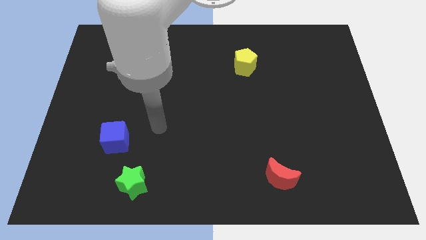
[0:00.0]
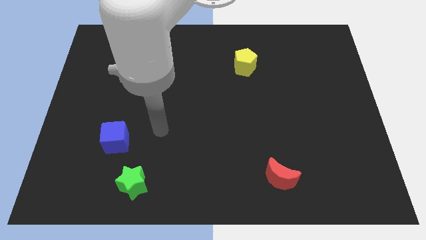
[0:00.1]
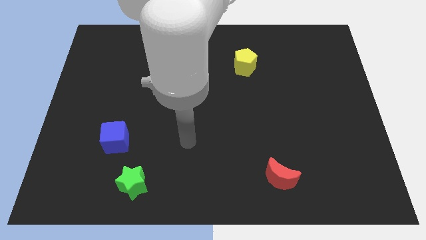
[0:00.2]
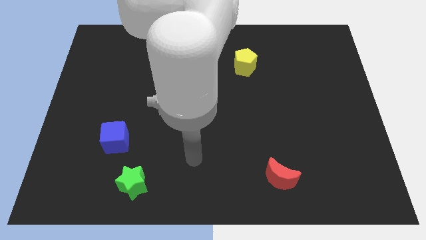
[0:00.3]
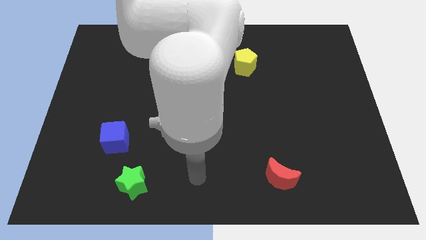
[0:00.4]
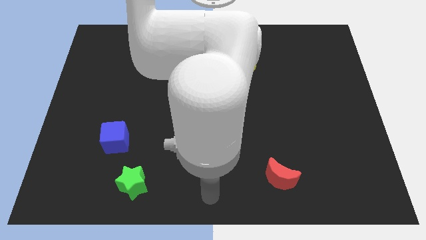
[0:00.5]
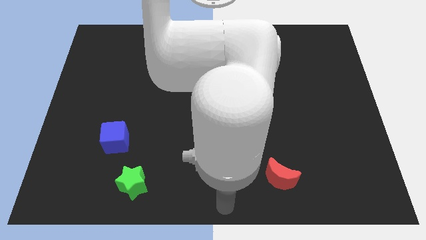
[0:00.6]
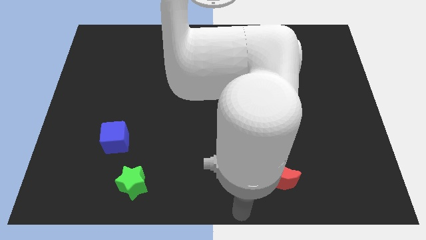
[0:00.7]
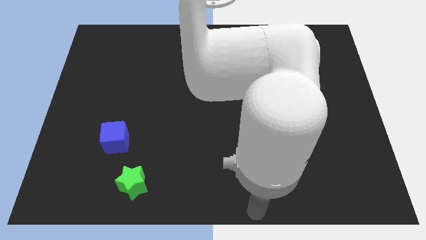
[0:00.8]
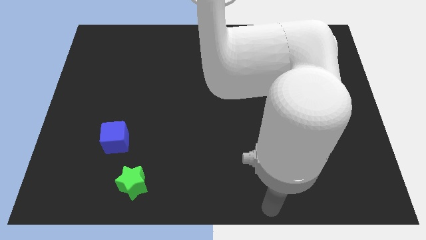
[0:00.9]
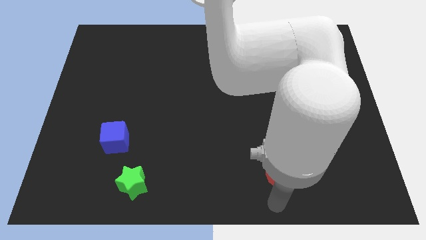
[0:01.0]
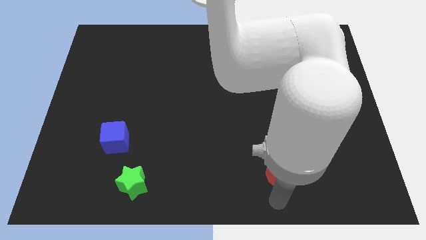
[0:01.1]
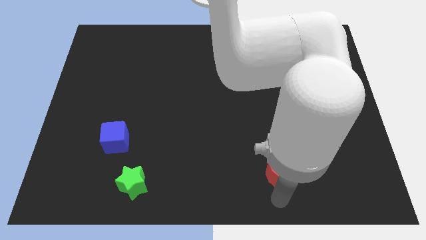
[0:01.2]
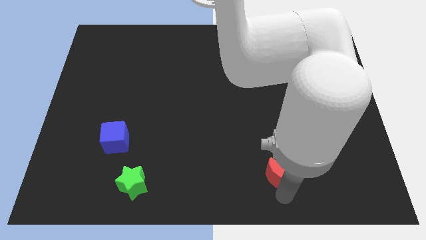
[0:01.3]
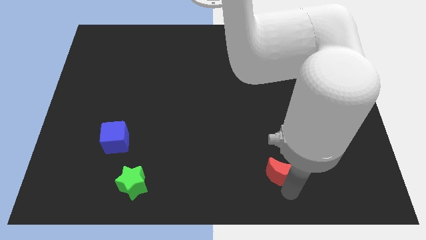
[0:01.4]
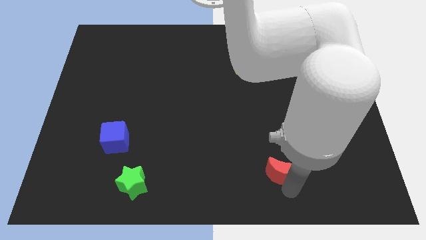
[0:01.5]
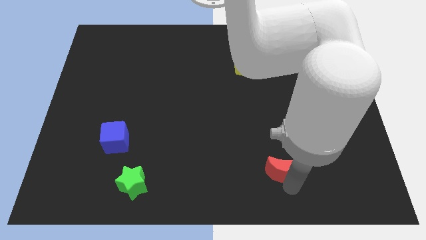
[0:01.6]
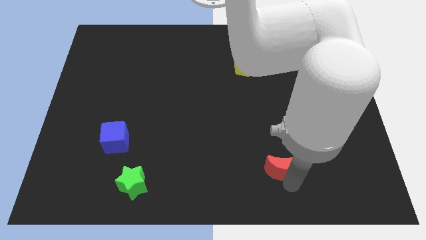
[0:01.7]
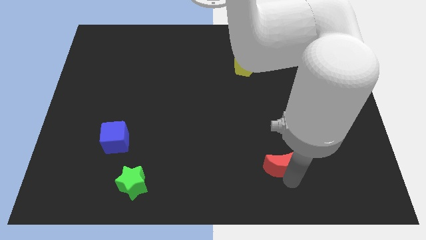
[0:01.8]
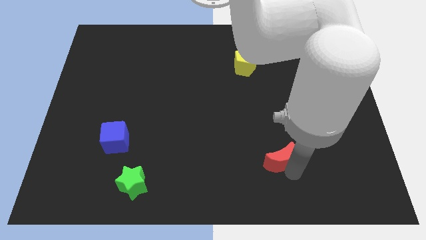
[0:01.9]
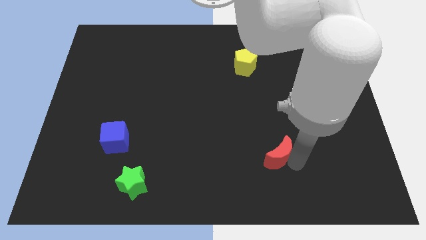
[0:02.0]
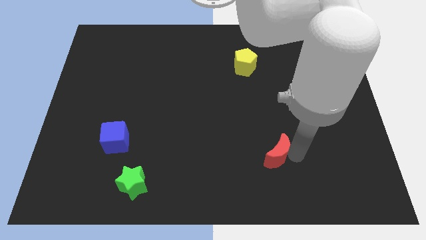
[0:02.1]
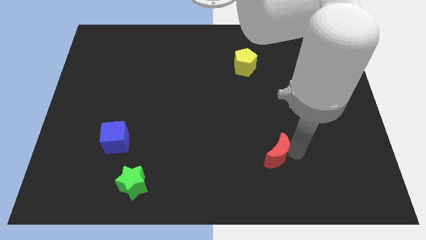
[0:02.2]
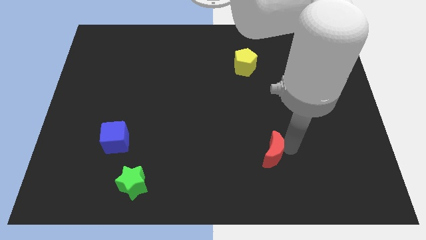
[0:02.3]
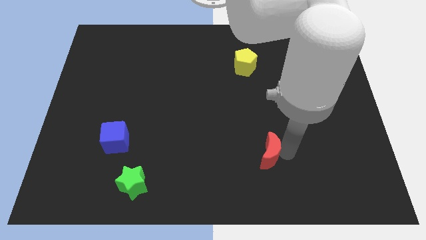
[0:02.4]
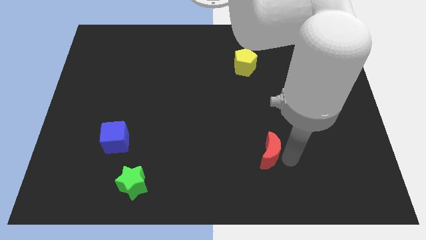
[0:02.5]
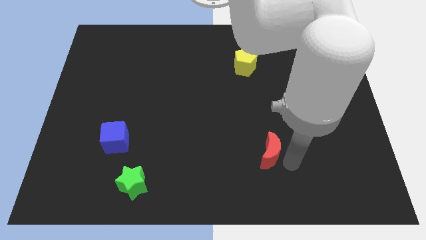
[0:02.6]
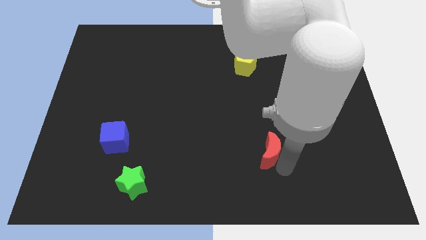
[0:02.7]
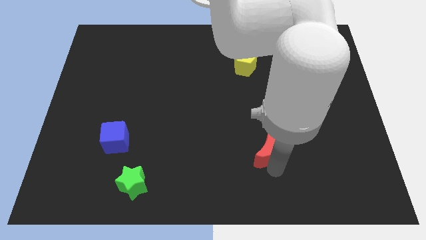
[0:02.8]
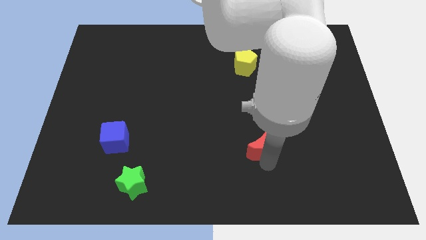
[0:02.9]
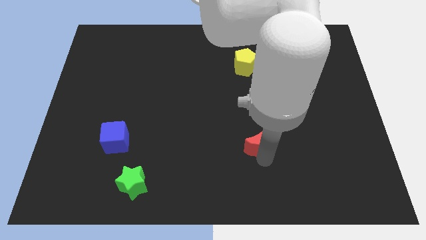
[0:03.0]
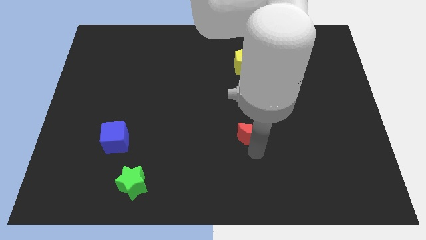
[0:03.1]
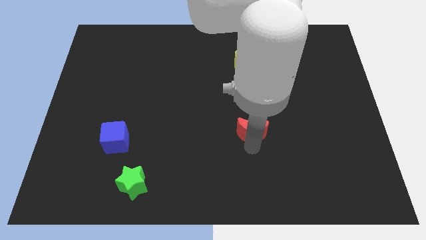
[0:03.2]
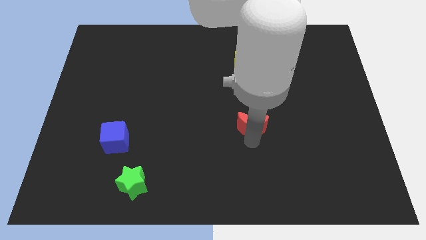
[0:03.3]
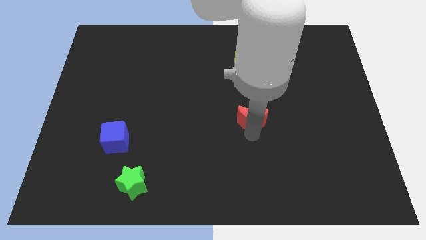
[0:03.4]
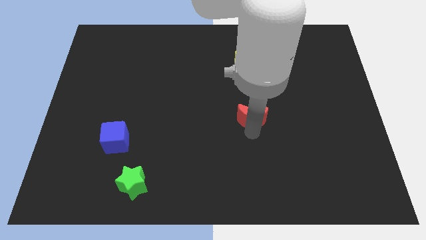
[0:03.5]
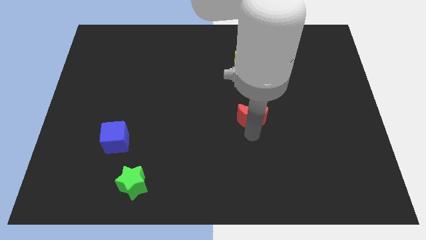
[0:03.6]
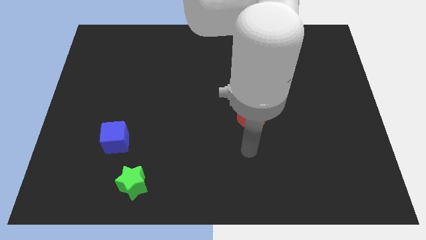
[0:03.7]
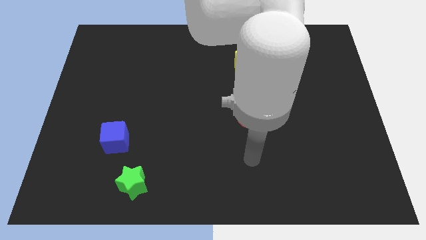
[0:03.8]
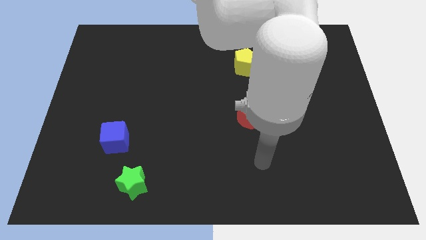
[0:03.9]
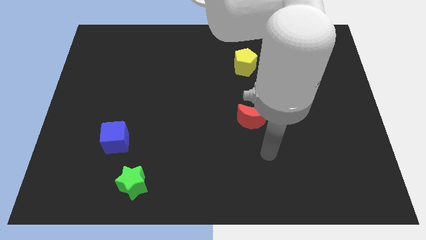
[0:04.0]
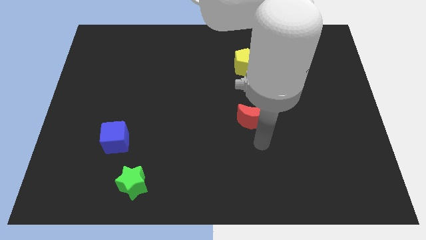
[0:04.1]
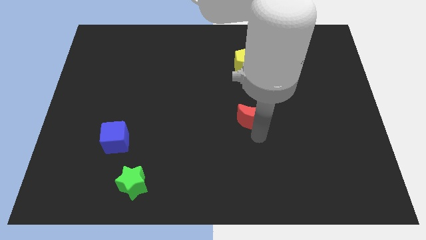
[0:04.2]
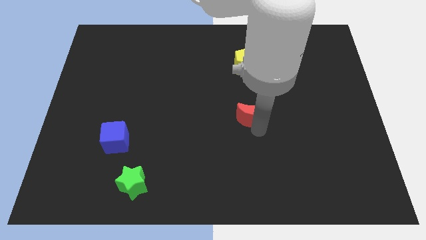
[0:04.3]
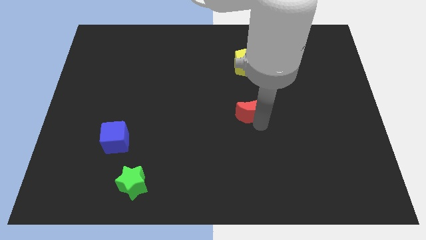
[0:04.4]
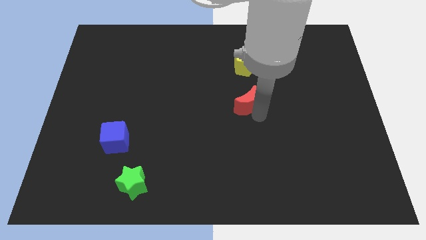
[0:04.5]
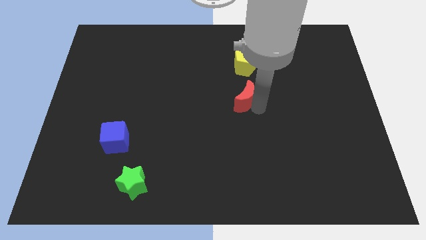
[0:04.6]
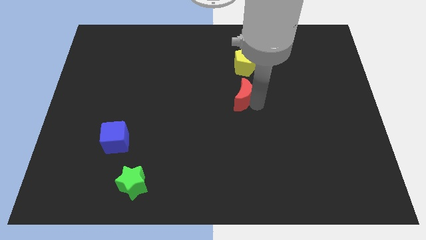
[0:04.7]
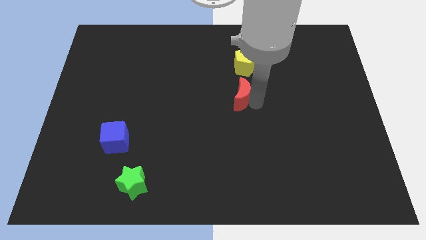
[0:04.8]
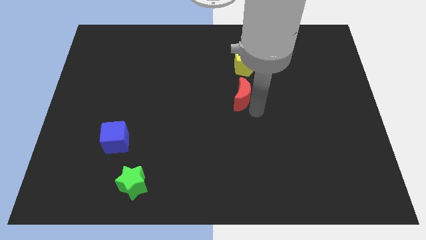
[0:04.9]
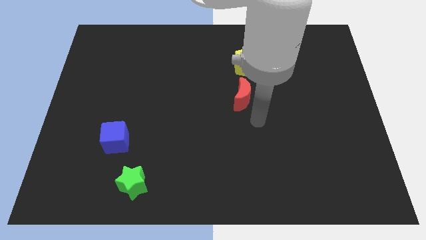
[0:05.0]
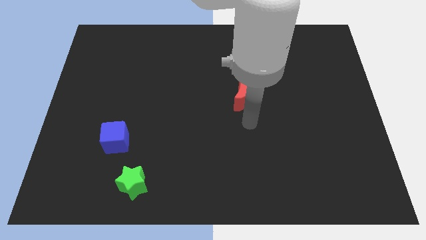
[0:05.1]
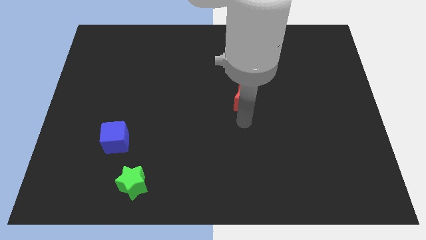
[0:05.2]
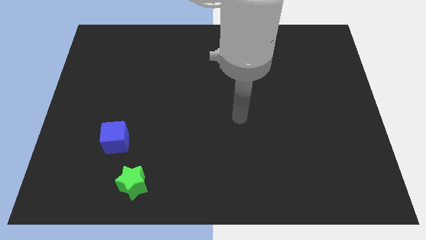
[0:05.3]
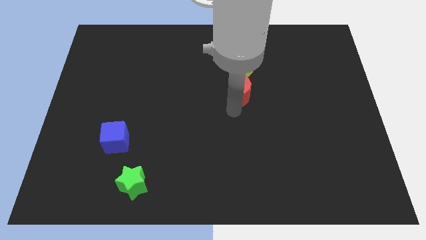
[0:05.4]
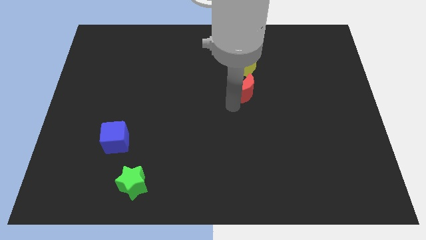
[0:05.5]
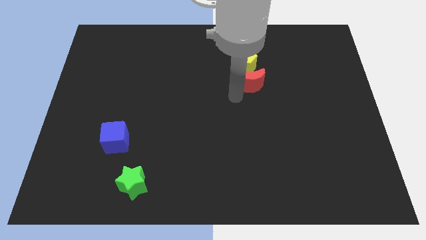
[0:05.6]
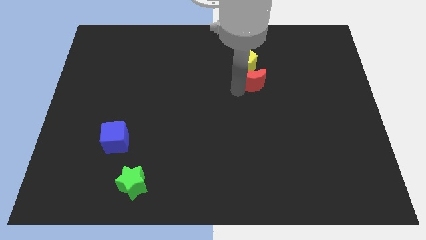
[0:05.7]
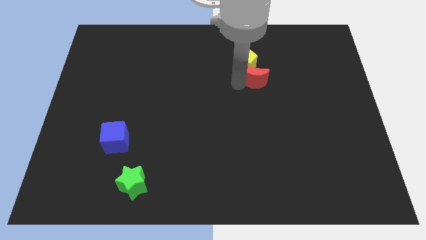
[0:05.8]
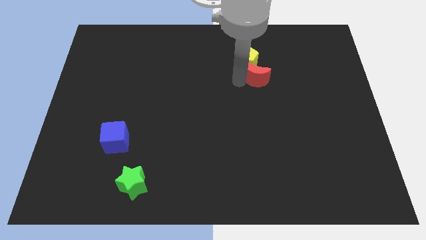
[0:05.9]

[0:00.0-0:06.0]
slide the red block next to the yellow block

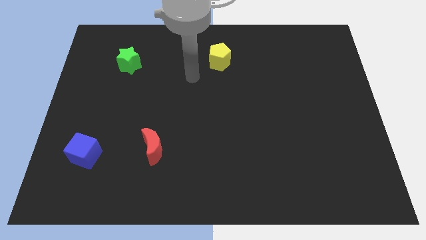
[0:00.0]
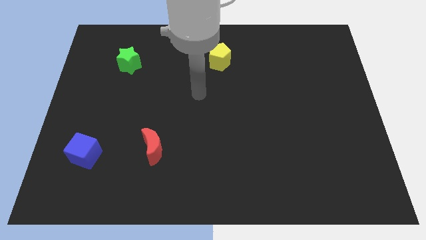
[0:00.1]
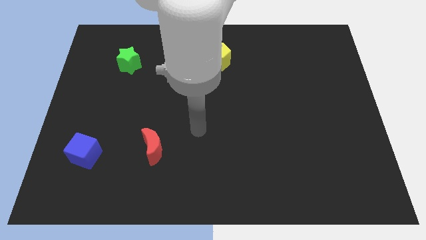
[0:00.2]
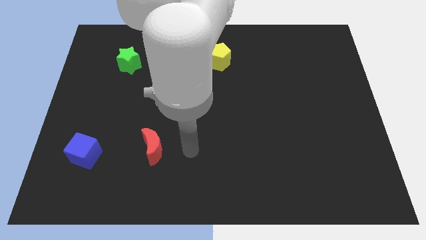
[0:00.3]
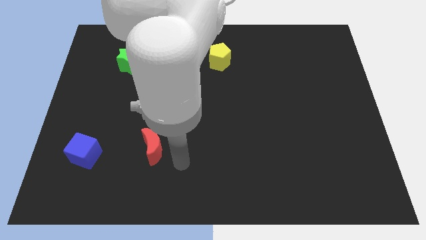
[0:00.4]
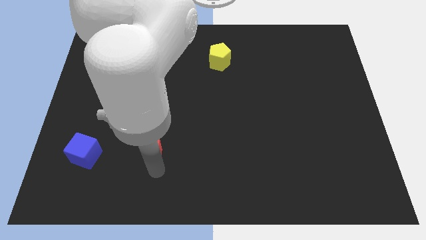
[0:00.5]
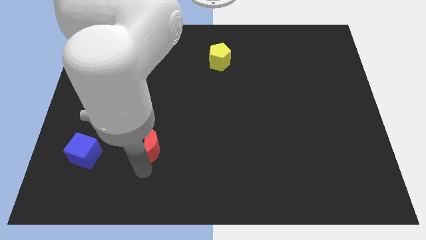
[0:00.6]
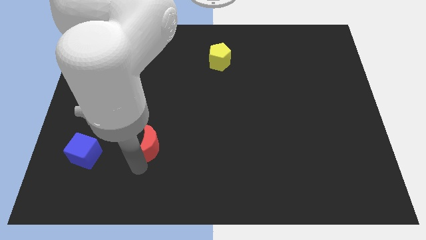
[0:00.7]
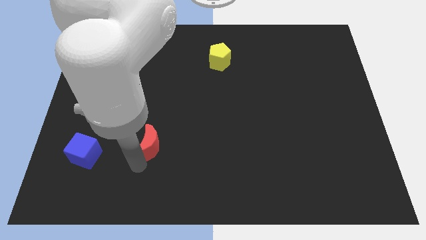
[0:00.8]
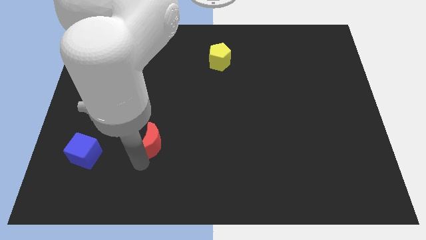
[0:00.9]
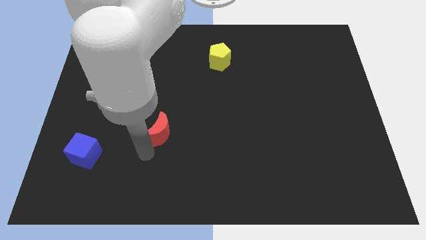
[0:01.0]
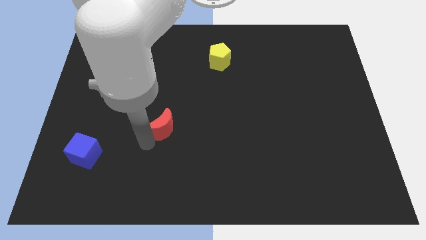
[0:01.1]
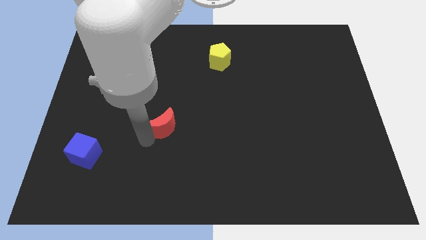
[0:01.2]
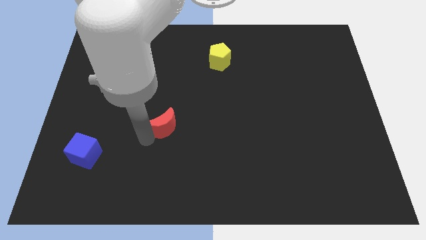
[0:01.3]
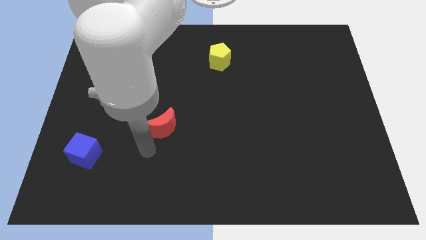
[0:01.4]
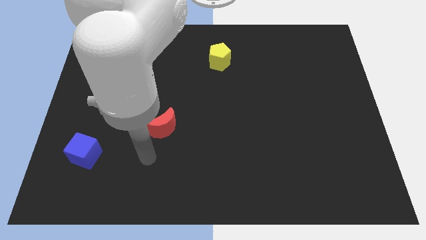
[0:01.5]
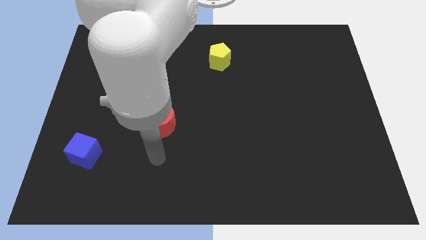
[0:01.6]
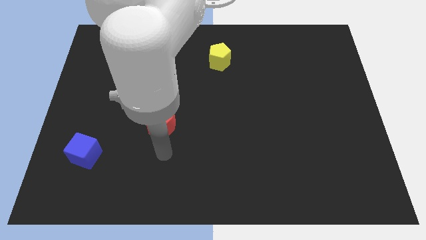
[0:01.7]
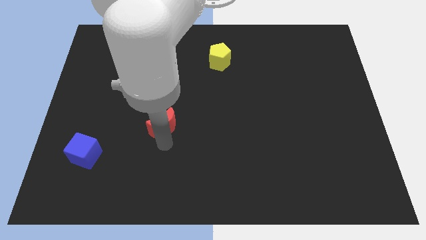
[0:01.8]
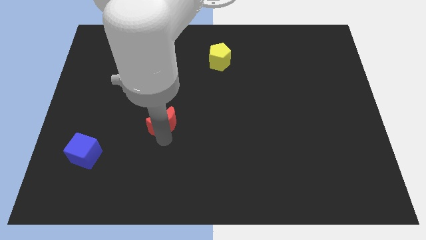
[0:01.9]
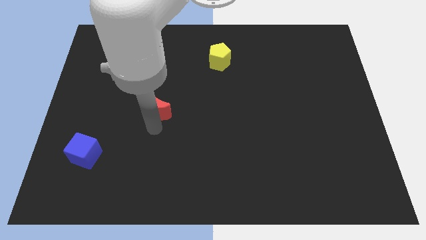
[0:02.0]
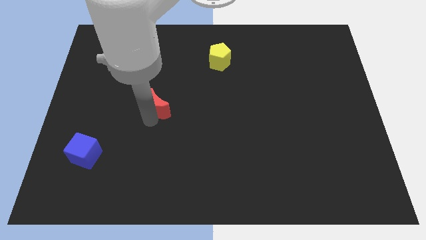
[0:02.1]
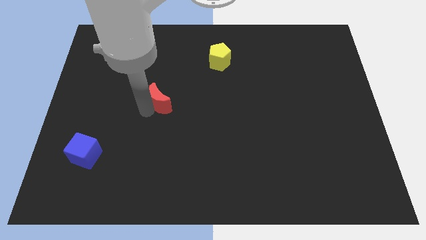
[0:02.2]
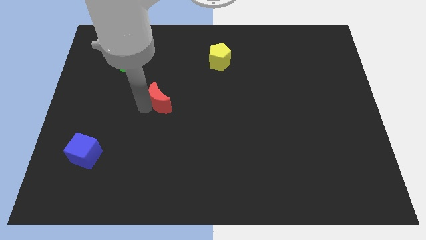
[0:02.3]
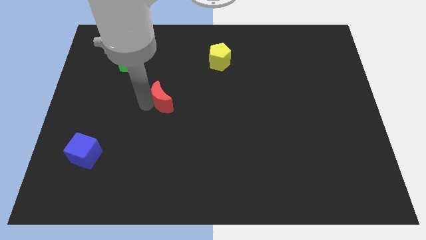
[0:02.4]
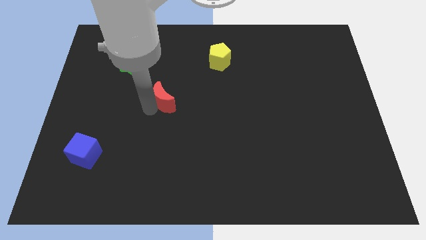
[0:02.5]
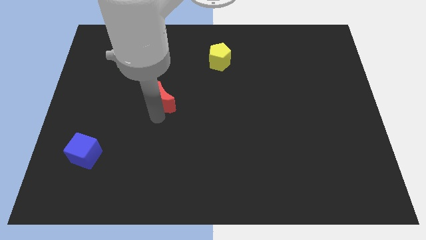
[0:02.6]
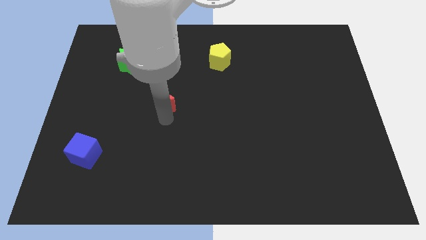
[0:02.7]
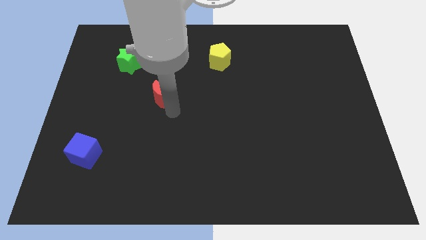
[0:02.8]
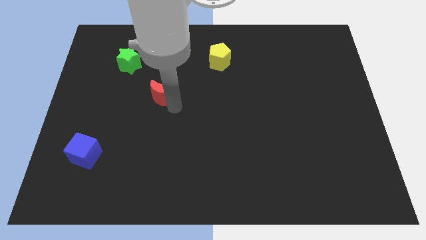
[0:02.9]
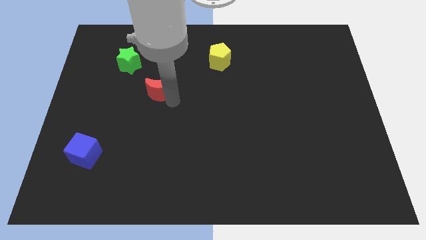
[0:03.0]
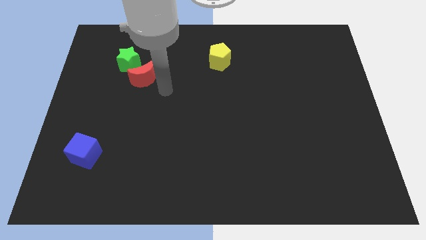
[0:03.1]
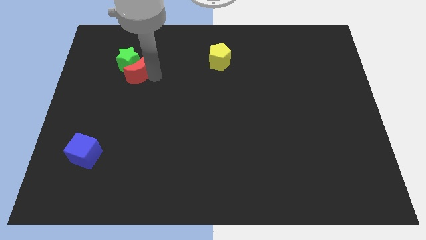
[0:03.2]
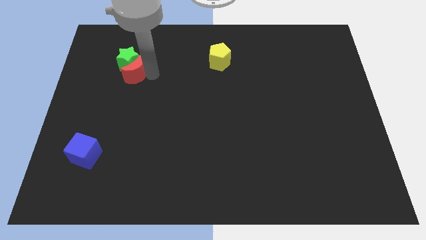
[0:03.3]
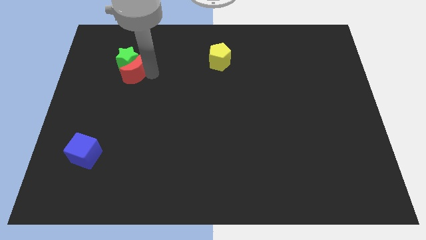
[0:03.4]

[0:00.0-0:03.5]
put the red block towards the green star
